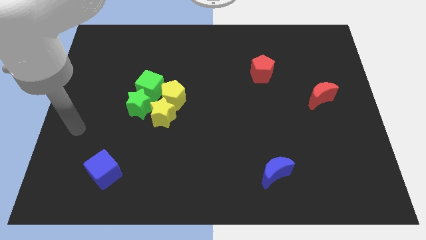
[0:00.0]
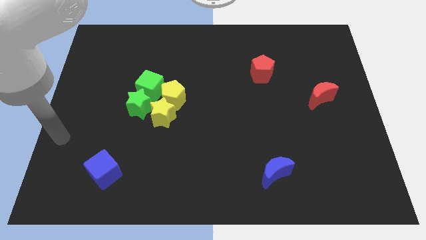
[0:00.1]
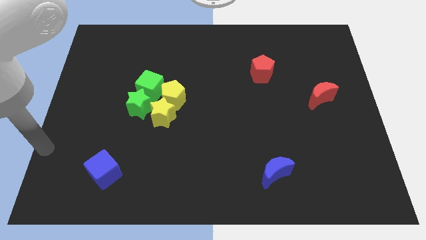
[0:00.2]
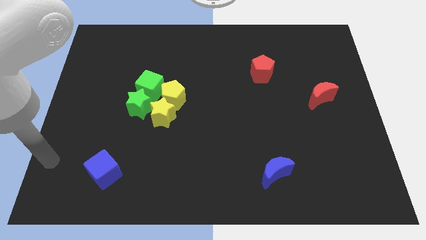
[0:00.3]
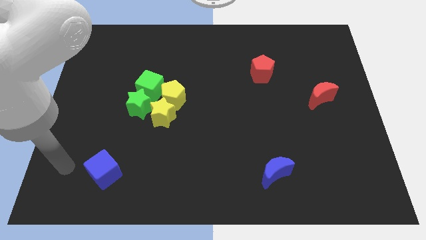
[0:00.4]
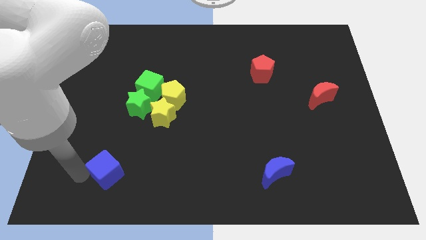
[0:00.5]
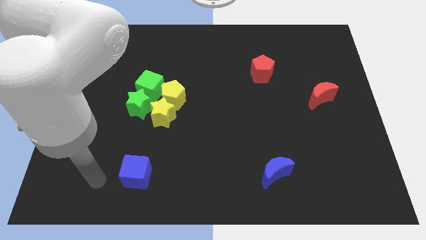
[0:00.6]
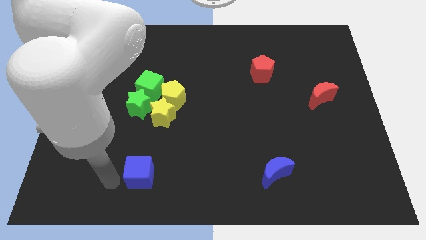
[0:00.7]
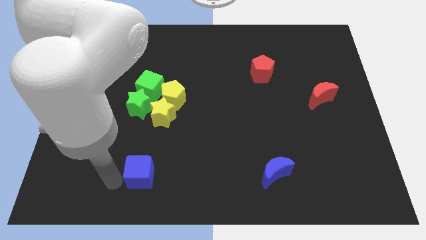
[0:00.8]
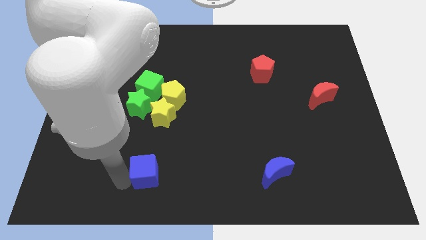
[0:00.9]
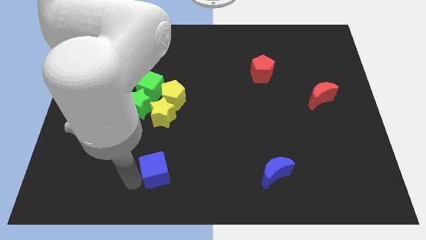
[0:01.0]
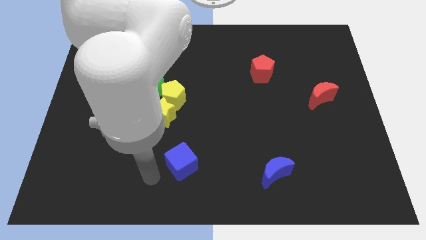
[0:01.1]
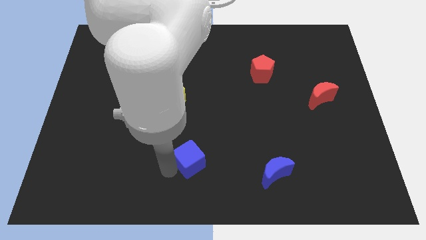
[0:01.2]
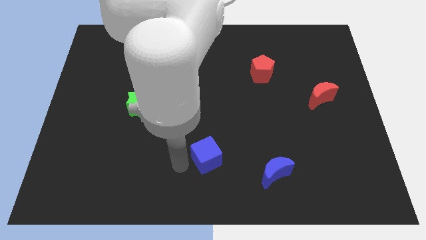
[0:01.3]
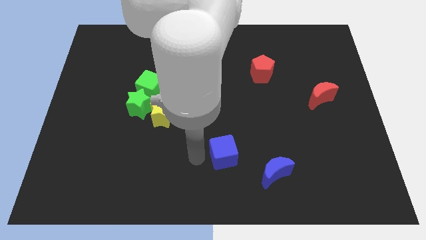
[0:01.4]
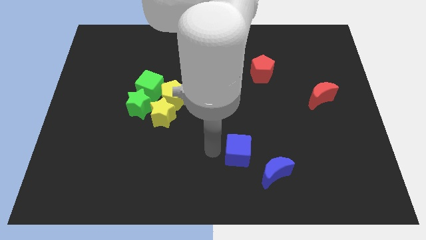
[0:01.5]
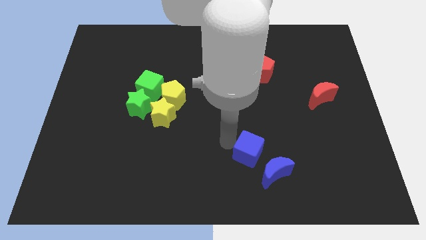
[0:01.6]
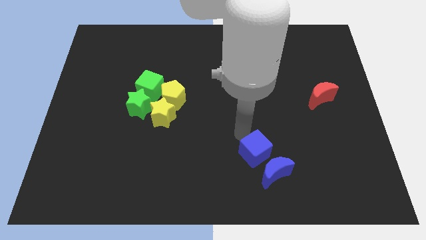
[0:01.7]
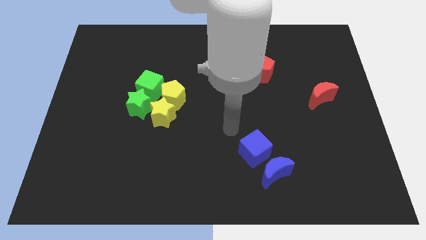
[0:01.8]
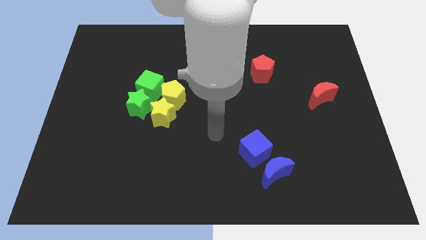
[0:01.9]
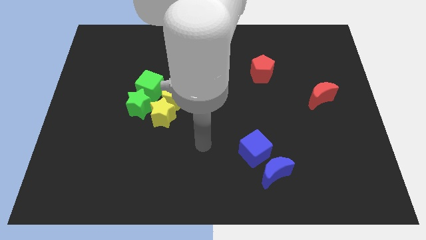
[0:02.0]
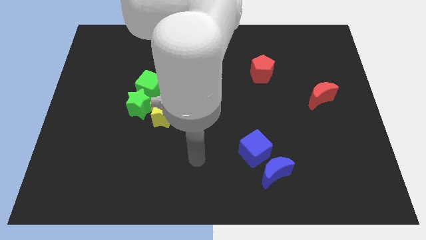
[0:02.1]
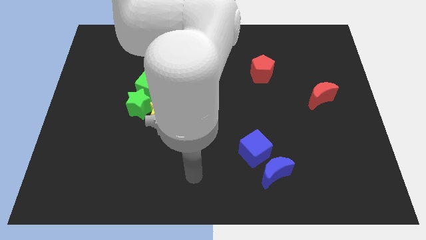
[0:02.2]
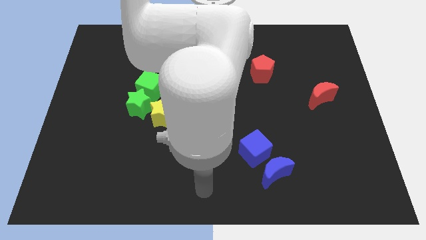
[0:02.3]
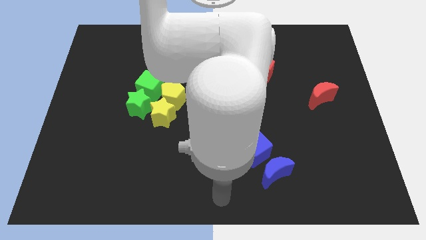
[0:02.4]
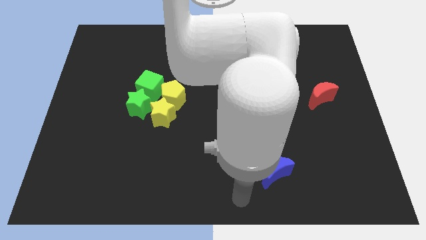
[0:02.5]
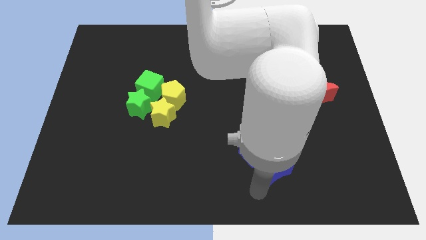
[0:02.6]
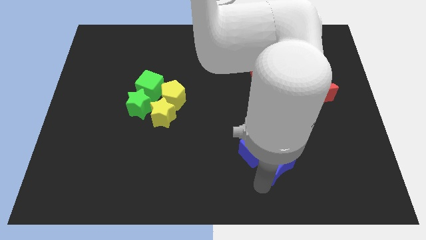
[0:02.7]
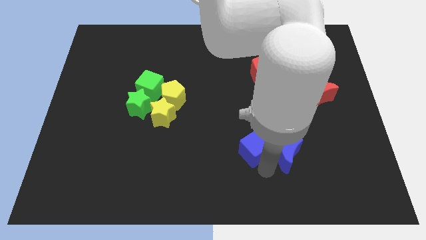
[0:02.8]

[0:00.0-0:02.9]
place the blue cube above the blue moon

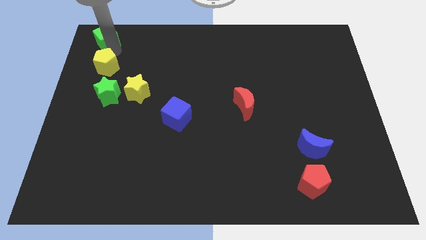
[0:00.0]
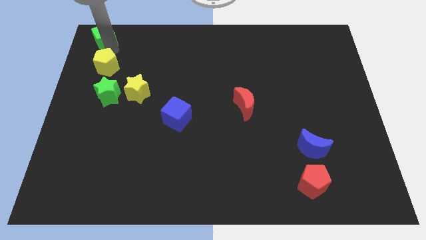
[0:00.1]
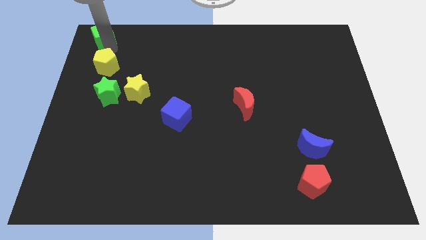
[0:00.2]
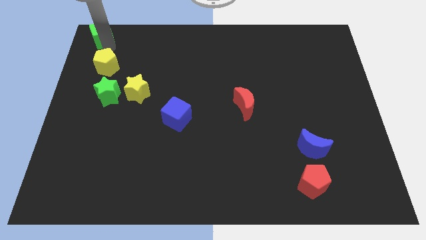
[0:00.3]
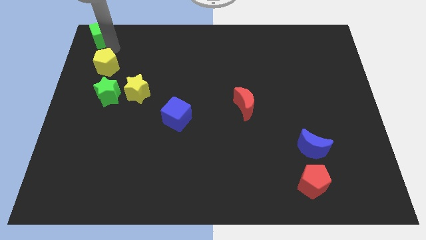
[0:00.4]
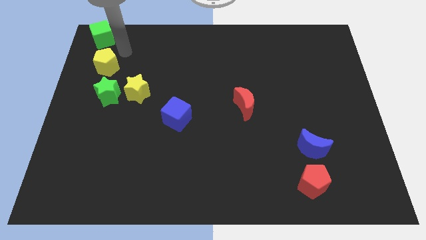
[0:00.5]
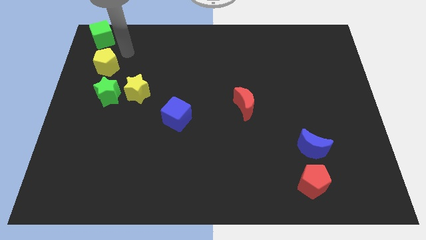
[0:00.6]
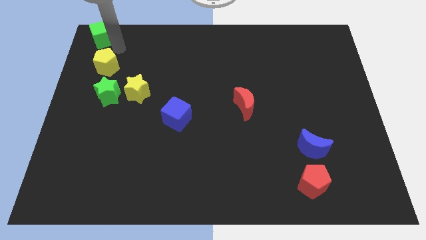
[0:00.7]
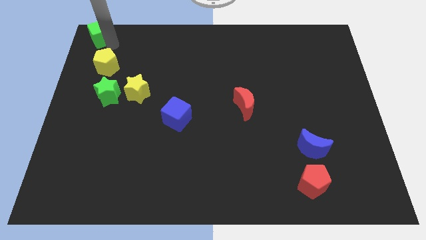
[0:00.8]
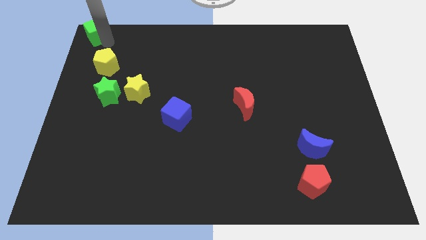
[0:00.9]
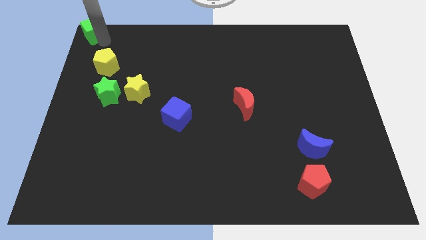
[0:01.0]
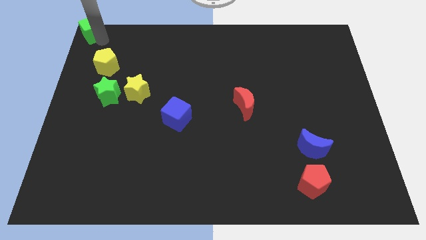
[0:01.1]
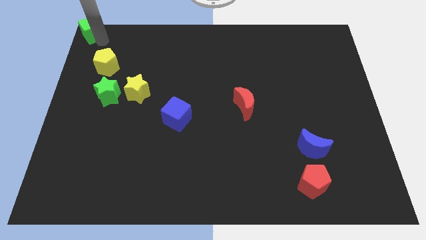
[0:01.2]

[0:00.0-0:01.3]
push the green cube to the top left corner of the board

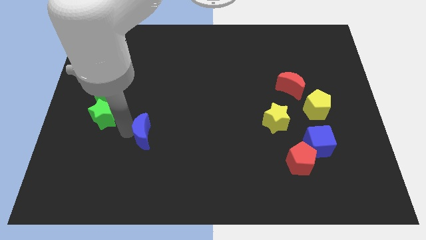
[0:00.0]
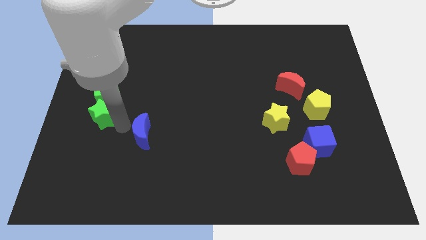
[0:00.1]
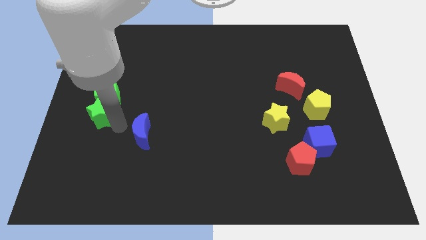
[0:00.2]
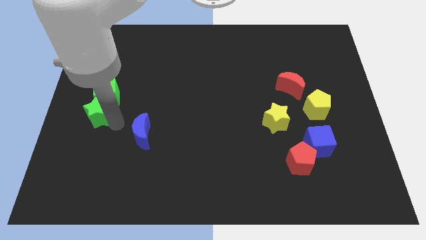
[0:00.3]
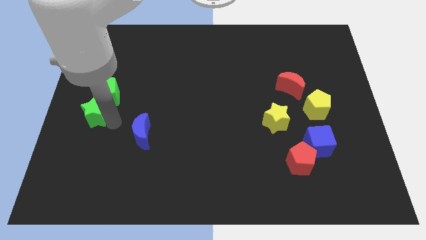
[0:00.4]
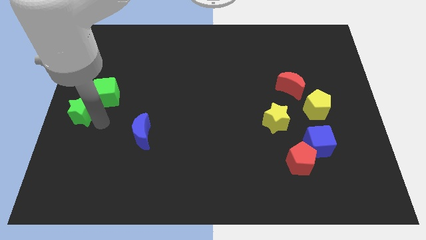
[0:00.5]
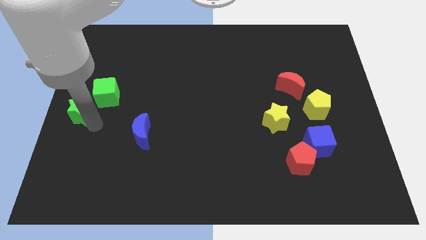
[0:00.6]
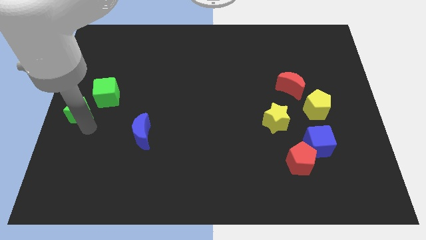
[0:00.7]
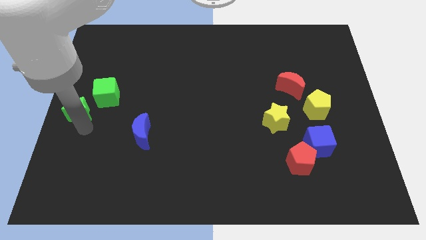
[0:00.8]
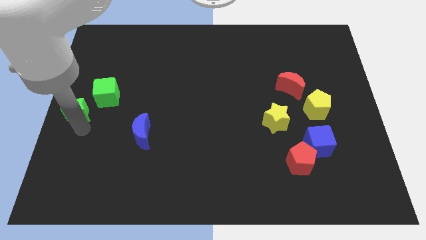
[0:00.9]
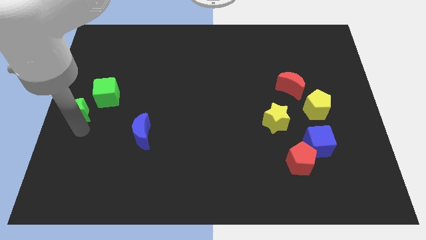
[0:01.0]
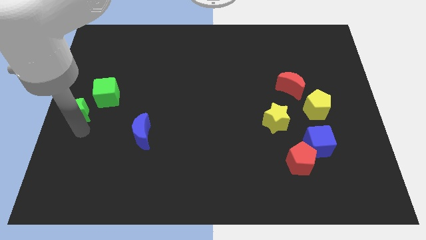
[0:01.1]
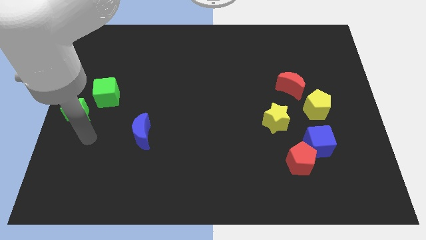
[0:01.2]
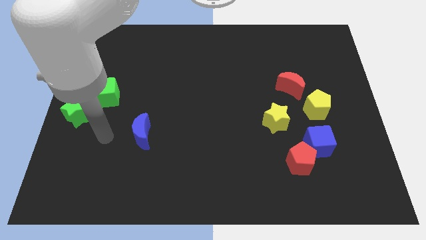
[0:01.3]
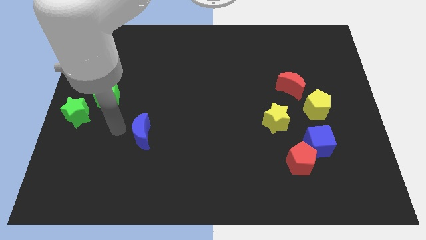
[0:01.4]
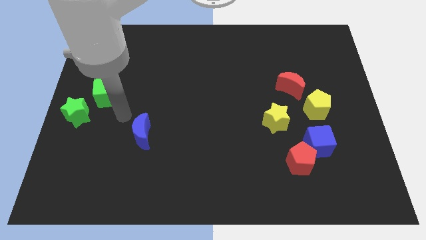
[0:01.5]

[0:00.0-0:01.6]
separate the green star from green cube

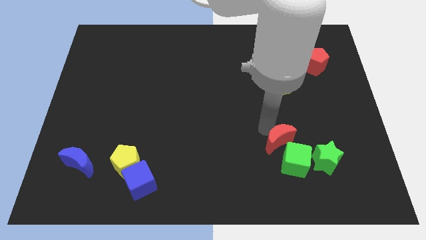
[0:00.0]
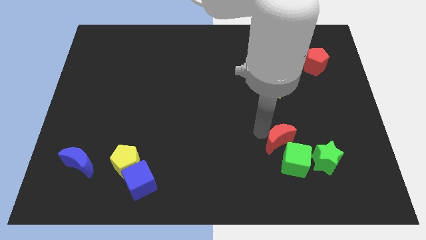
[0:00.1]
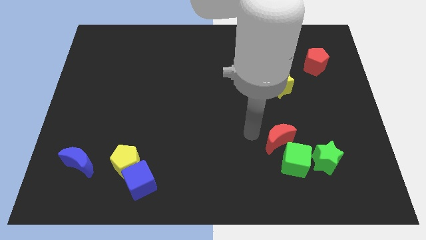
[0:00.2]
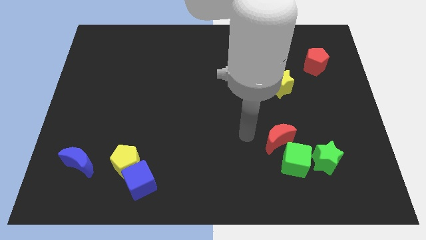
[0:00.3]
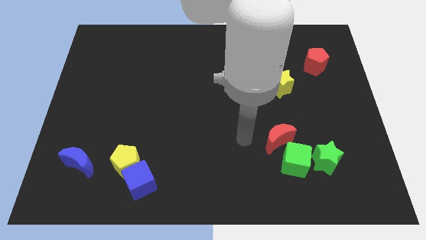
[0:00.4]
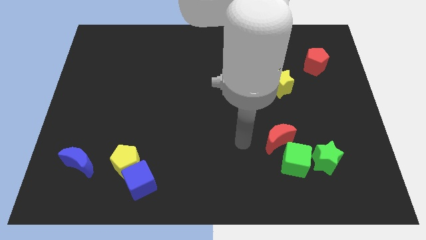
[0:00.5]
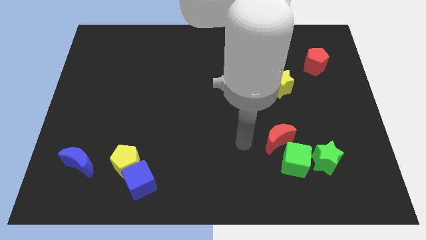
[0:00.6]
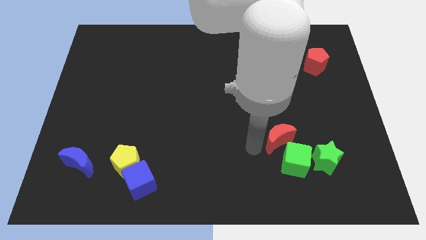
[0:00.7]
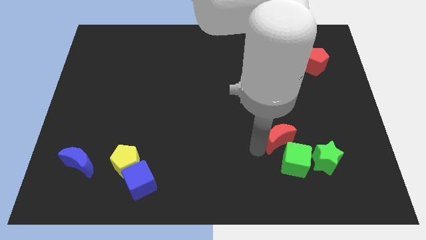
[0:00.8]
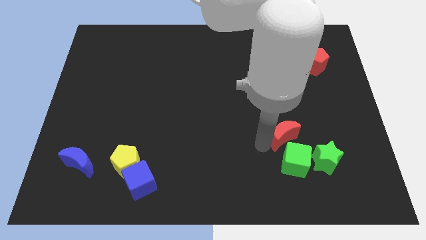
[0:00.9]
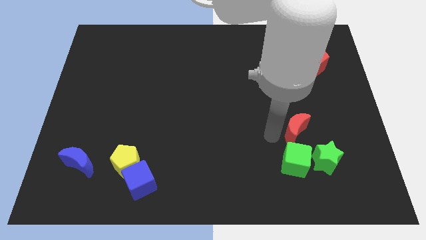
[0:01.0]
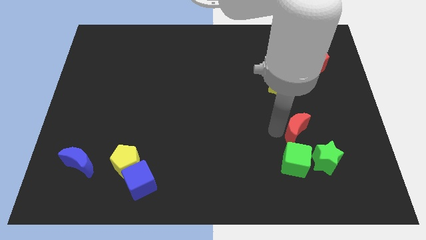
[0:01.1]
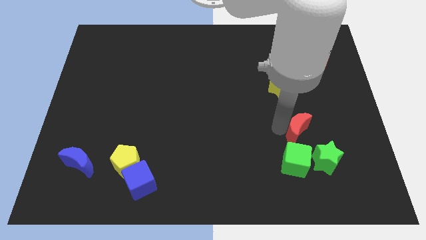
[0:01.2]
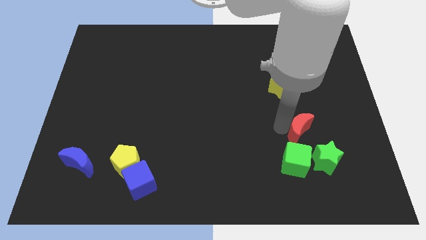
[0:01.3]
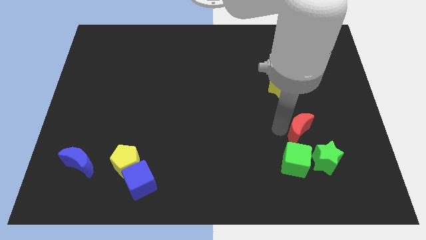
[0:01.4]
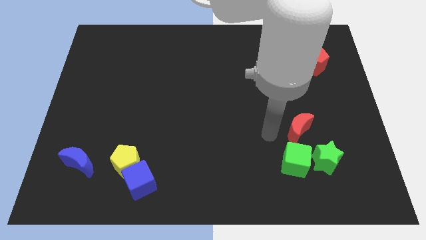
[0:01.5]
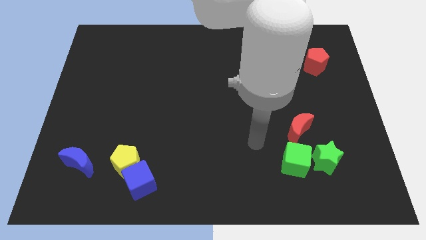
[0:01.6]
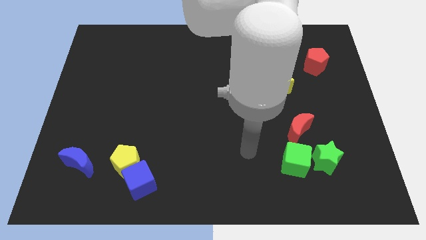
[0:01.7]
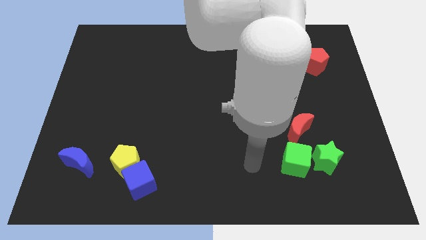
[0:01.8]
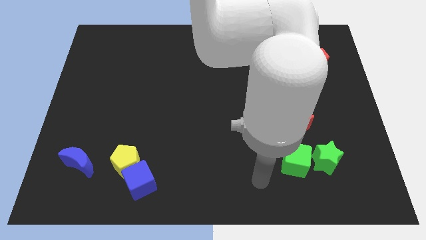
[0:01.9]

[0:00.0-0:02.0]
place the red moon above the green cube

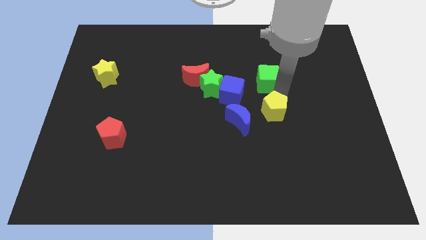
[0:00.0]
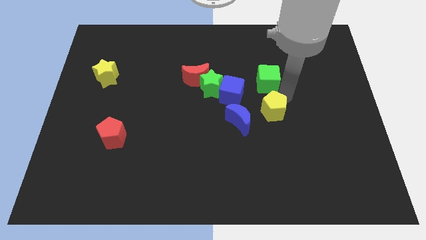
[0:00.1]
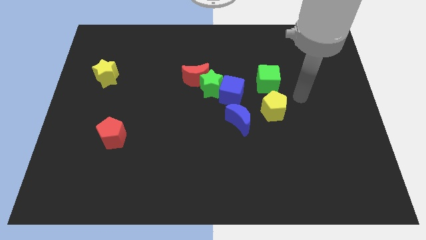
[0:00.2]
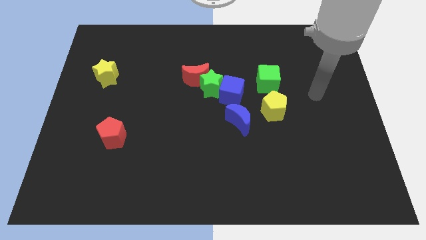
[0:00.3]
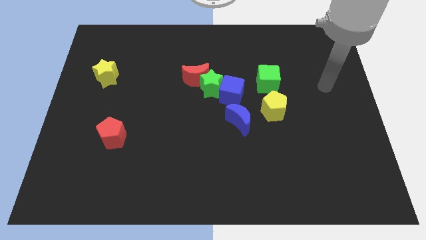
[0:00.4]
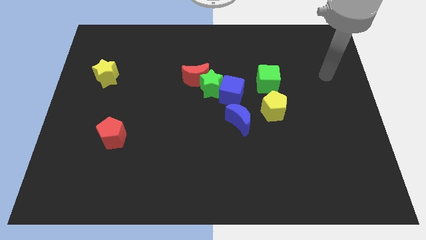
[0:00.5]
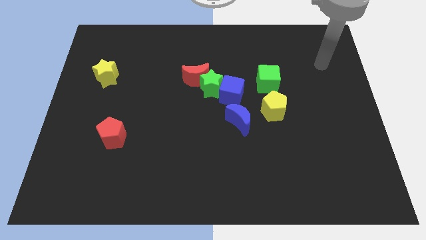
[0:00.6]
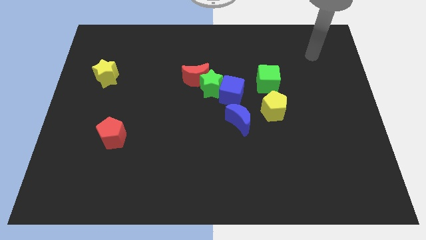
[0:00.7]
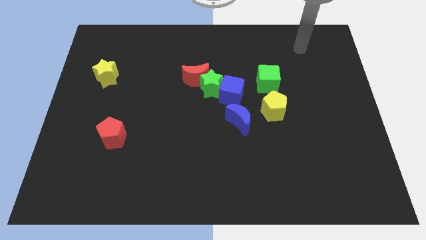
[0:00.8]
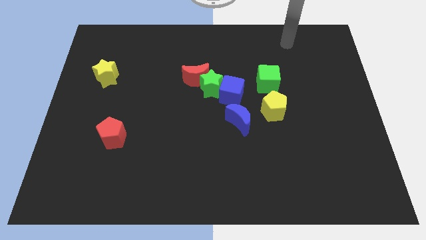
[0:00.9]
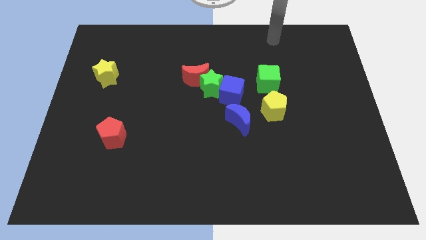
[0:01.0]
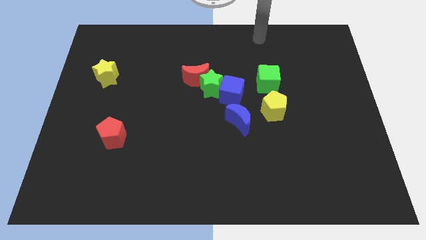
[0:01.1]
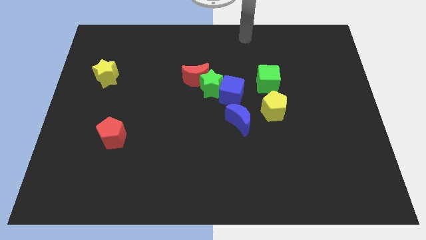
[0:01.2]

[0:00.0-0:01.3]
move arm away from yellow pentagon
